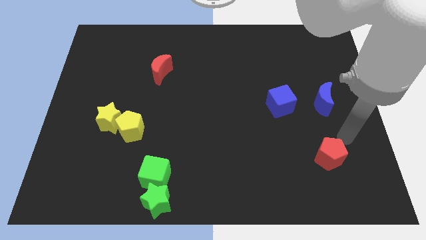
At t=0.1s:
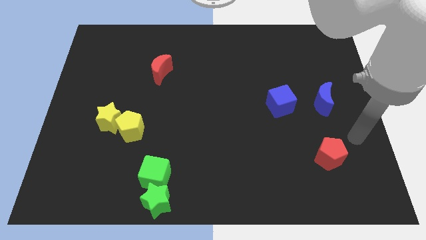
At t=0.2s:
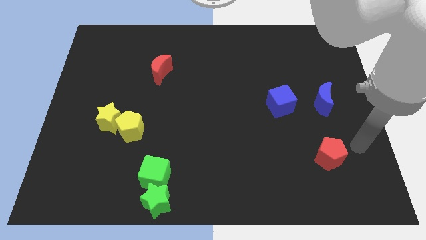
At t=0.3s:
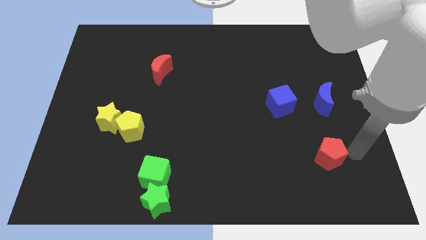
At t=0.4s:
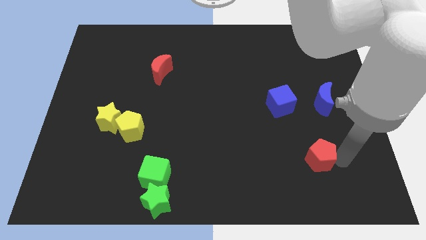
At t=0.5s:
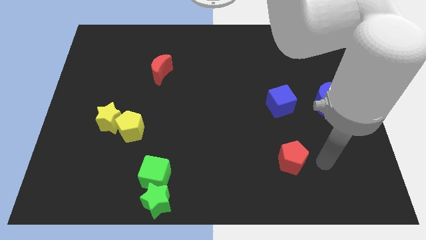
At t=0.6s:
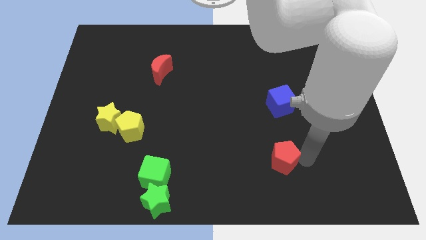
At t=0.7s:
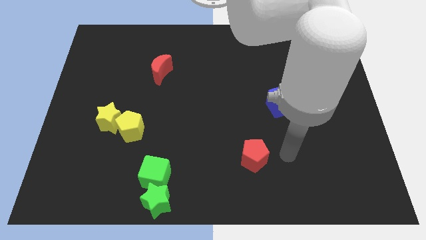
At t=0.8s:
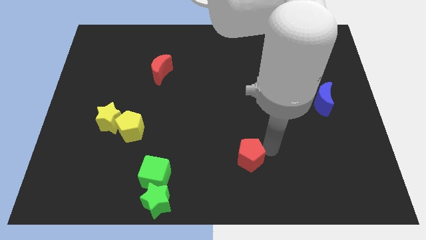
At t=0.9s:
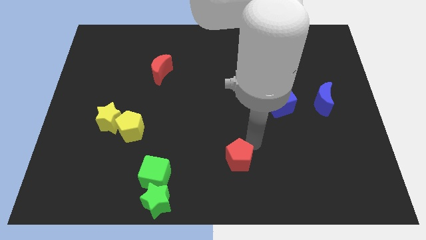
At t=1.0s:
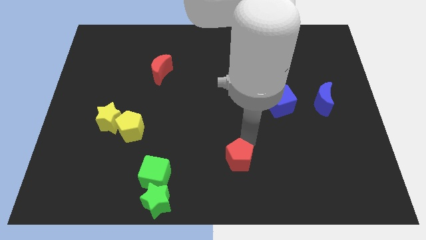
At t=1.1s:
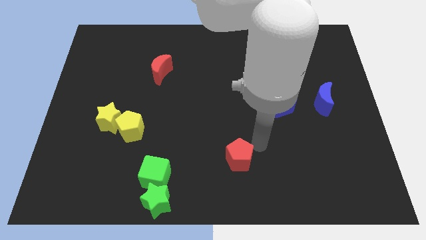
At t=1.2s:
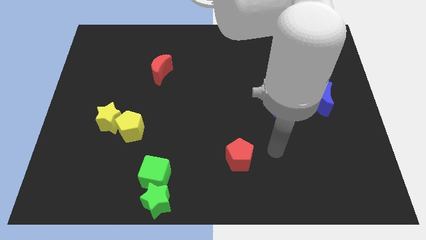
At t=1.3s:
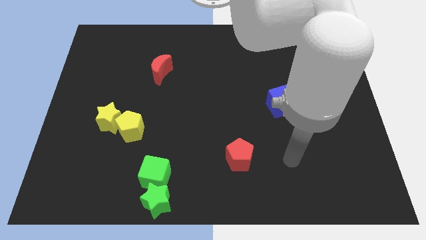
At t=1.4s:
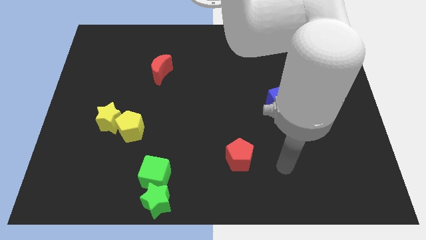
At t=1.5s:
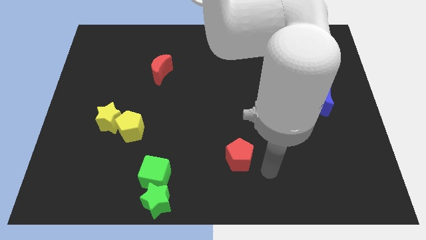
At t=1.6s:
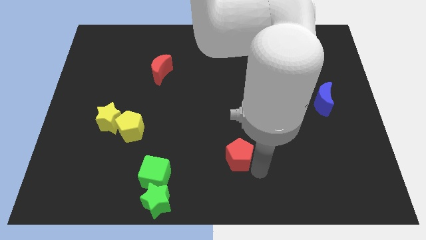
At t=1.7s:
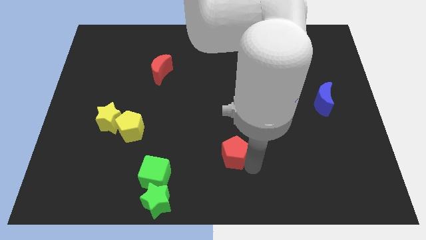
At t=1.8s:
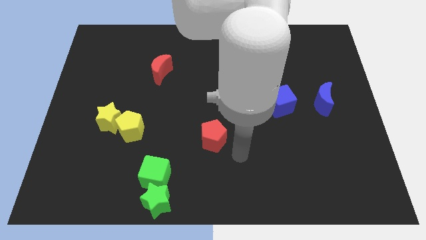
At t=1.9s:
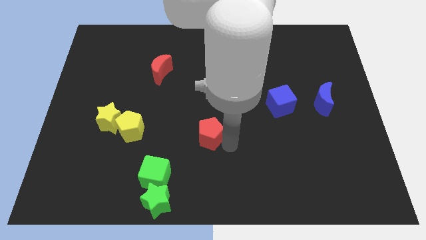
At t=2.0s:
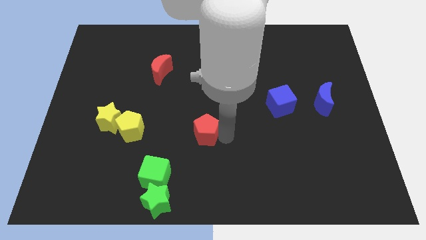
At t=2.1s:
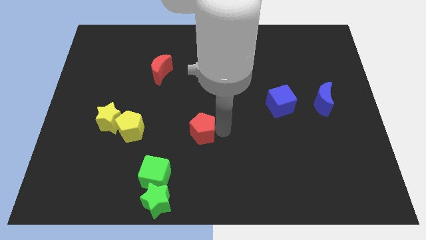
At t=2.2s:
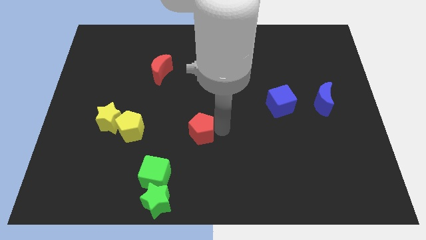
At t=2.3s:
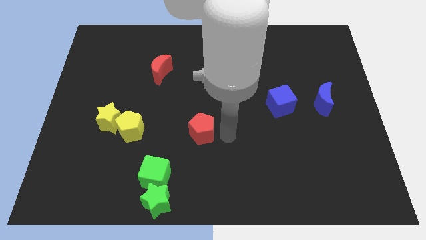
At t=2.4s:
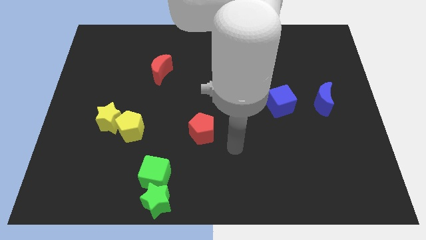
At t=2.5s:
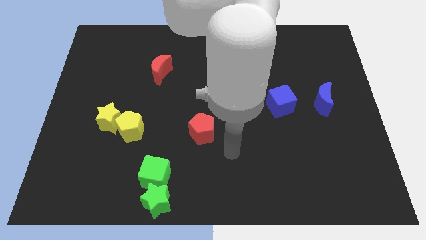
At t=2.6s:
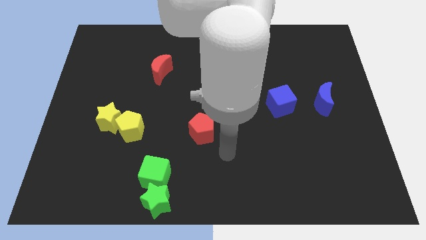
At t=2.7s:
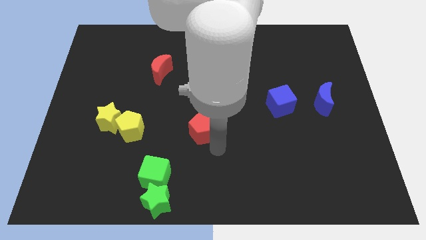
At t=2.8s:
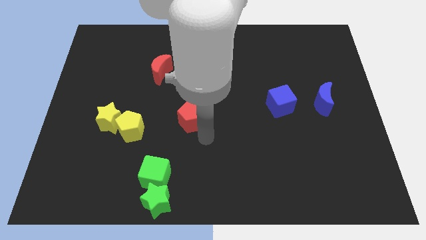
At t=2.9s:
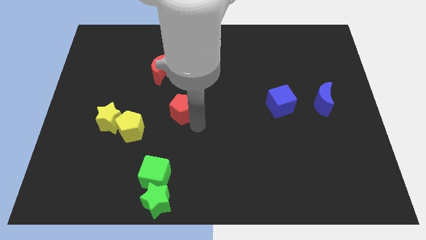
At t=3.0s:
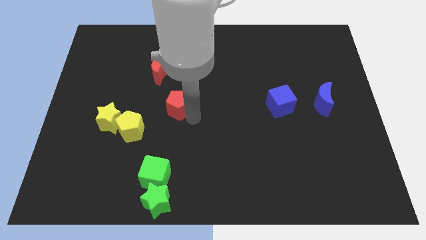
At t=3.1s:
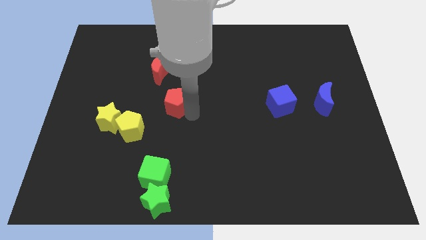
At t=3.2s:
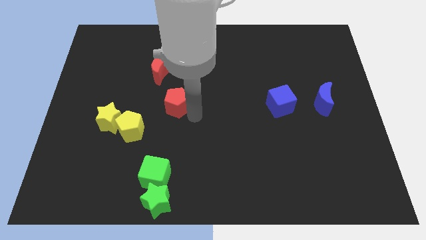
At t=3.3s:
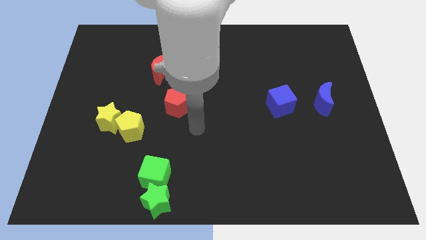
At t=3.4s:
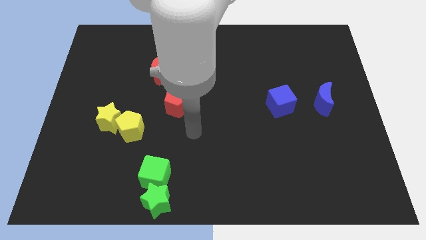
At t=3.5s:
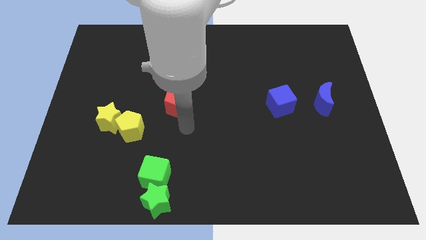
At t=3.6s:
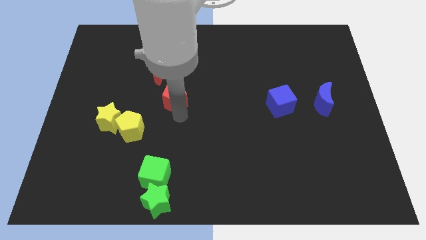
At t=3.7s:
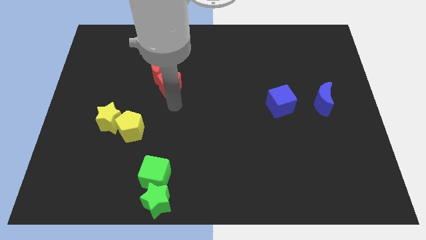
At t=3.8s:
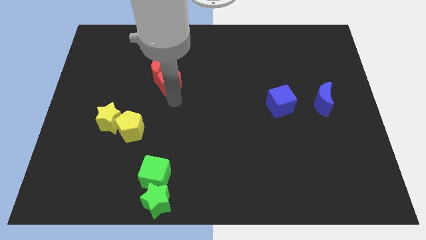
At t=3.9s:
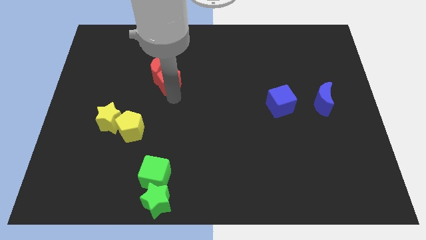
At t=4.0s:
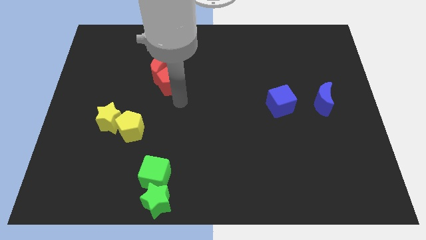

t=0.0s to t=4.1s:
push the red pentagon into the red crescent

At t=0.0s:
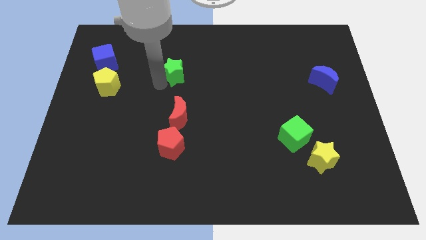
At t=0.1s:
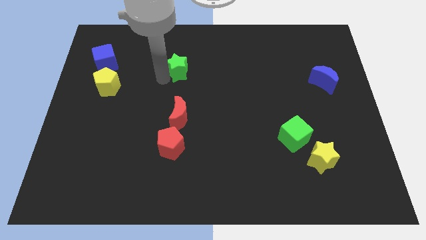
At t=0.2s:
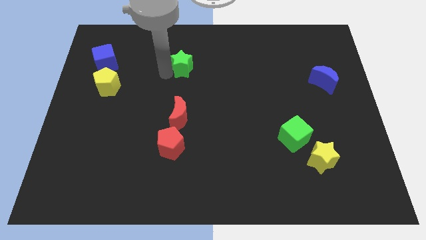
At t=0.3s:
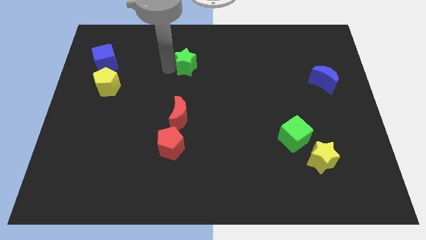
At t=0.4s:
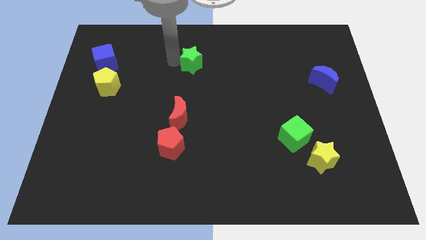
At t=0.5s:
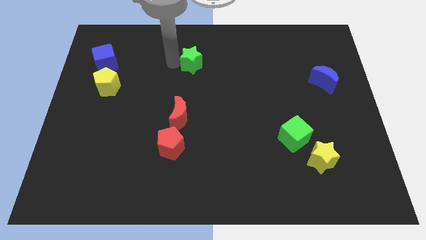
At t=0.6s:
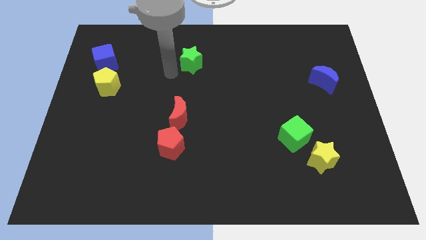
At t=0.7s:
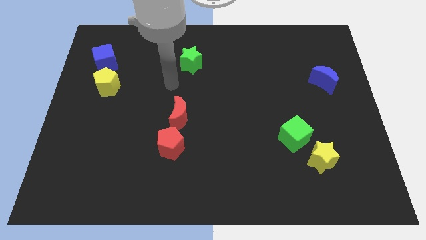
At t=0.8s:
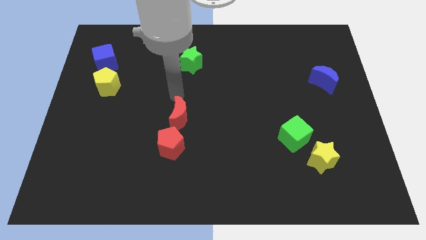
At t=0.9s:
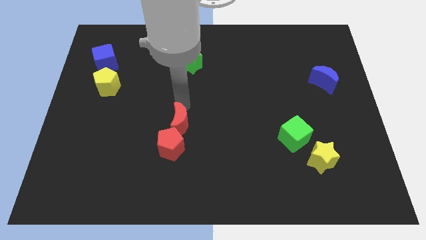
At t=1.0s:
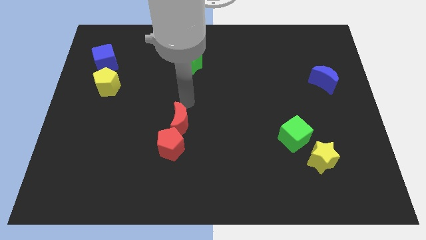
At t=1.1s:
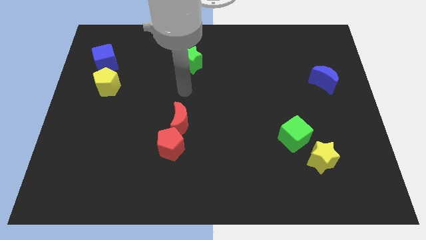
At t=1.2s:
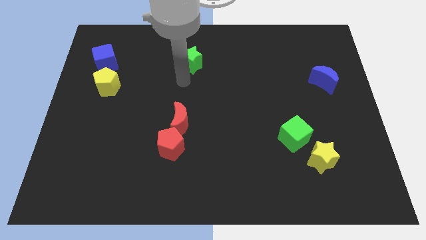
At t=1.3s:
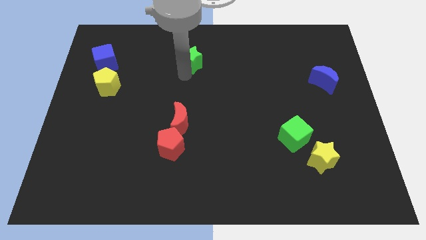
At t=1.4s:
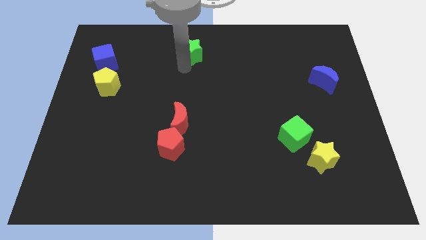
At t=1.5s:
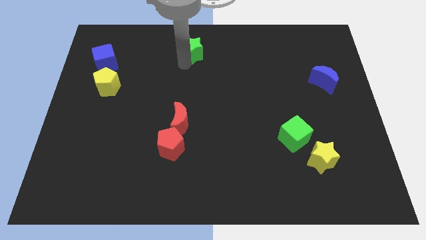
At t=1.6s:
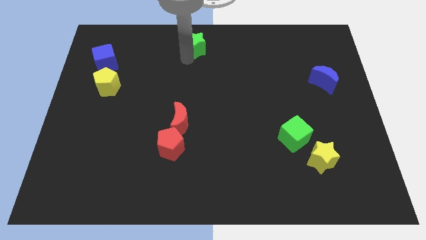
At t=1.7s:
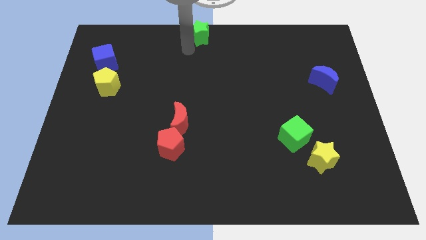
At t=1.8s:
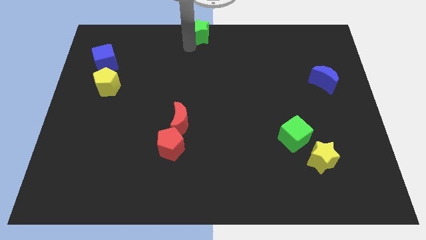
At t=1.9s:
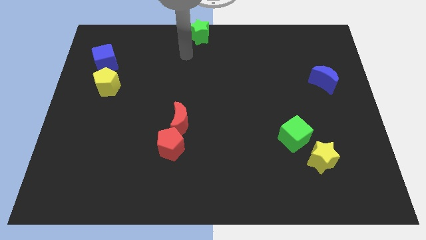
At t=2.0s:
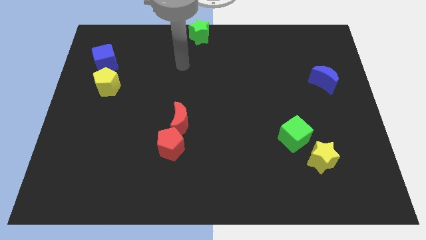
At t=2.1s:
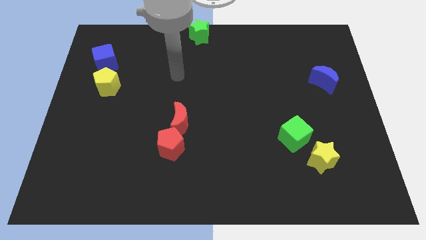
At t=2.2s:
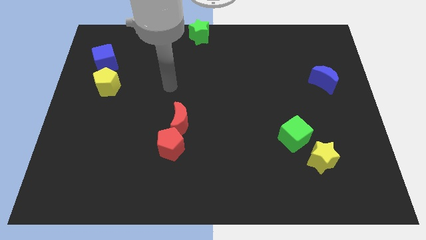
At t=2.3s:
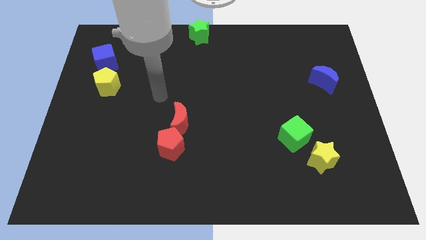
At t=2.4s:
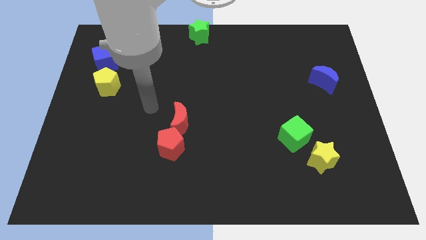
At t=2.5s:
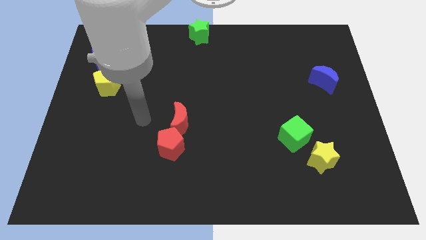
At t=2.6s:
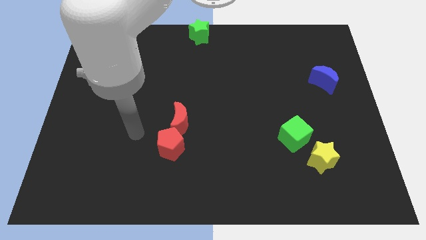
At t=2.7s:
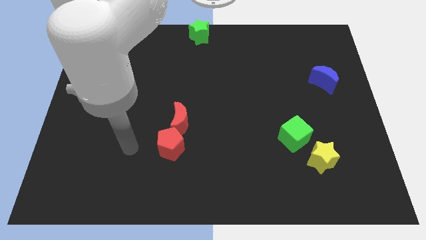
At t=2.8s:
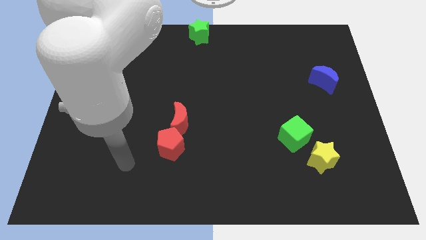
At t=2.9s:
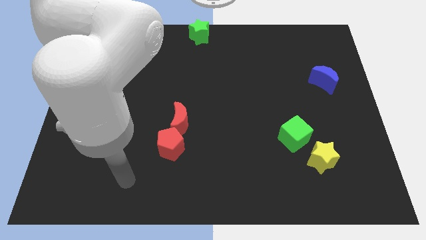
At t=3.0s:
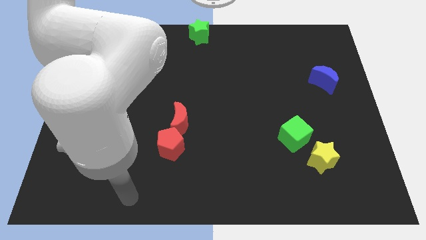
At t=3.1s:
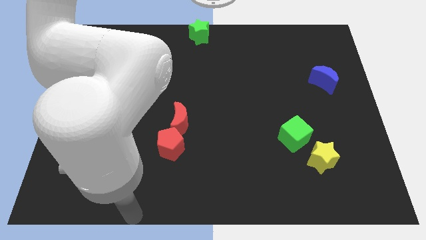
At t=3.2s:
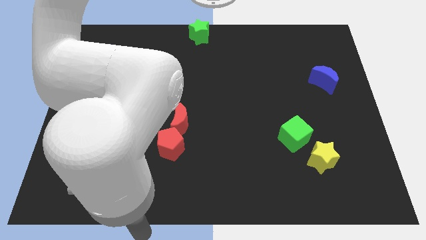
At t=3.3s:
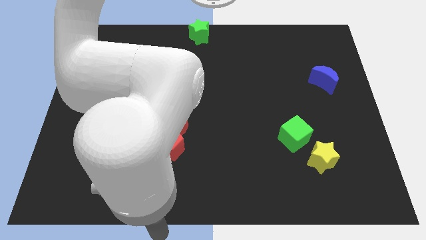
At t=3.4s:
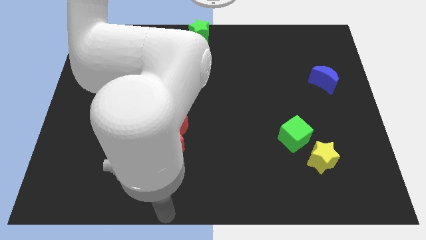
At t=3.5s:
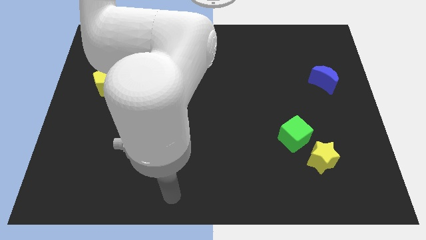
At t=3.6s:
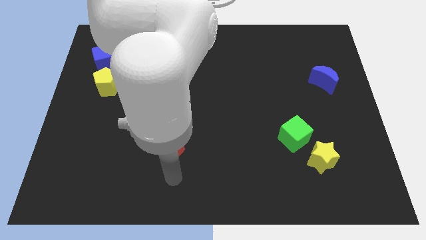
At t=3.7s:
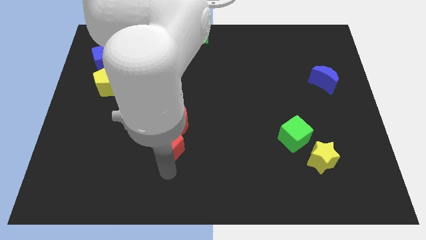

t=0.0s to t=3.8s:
move green star to top middle

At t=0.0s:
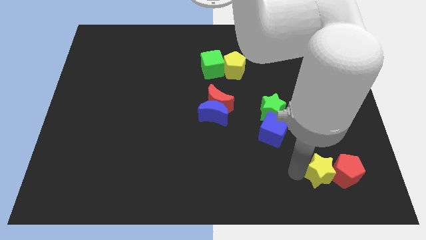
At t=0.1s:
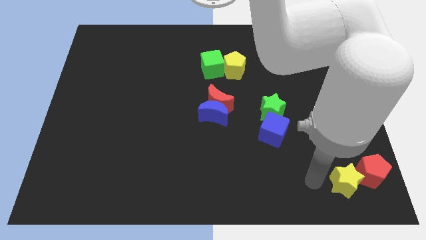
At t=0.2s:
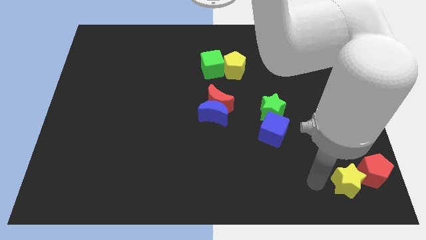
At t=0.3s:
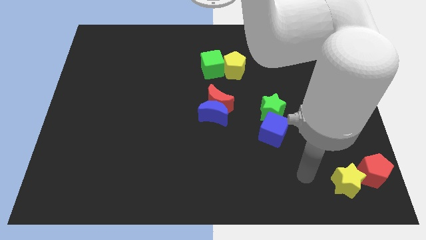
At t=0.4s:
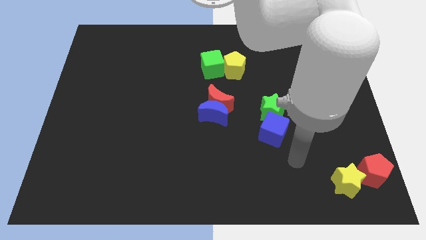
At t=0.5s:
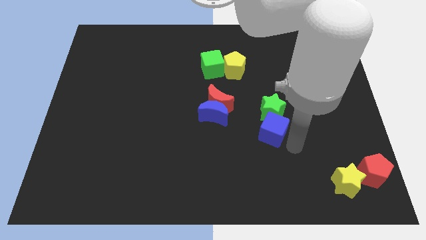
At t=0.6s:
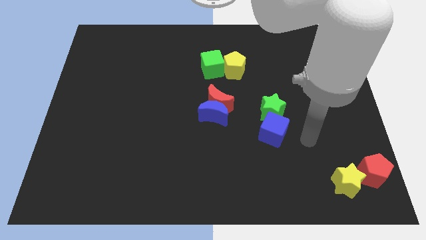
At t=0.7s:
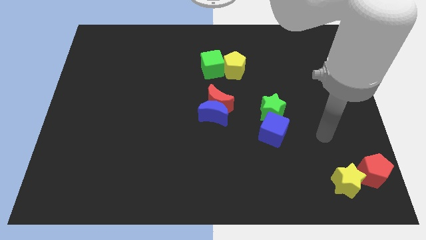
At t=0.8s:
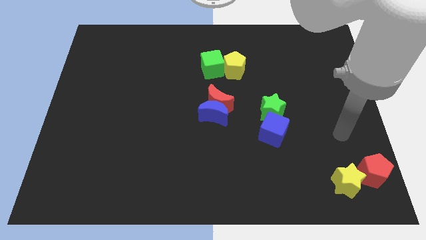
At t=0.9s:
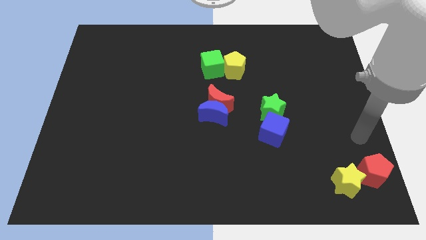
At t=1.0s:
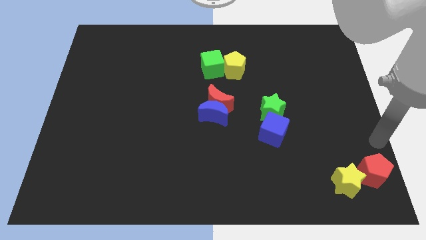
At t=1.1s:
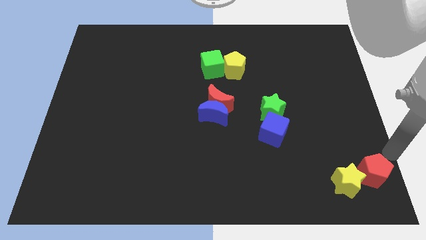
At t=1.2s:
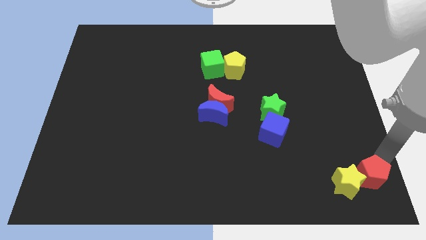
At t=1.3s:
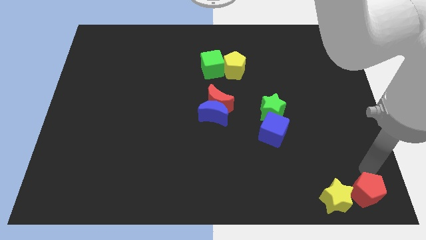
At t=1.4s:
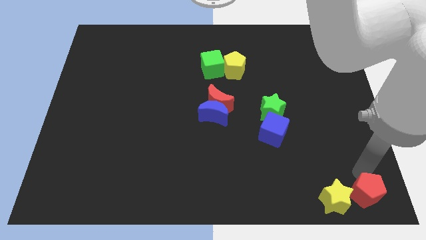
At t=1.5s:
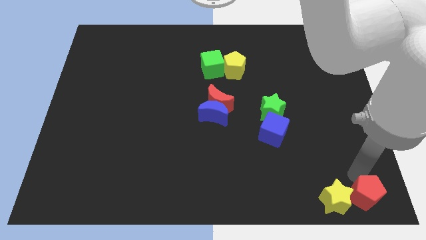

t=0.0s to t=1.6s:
push the red pentagonyellow star towards the bottom right side of the board
